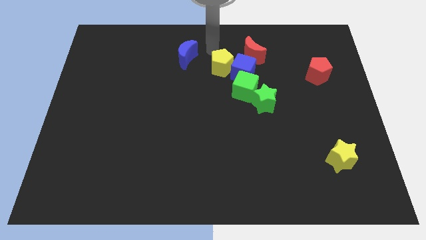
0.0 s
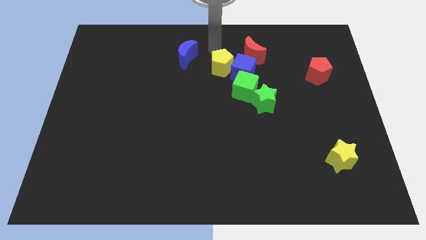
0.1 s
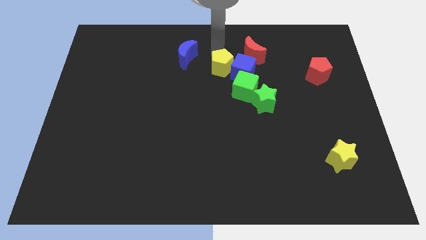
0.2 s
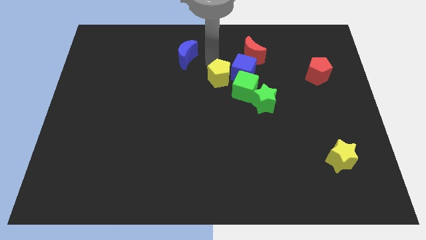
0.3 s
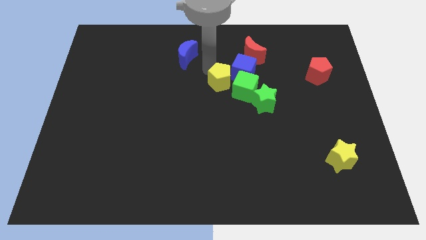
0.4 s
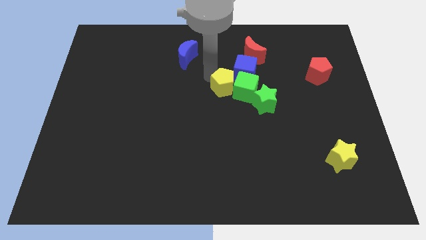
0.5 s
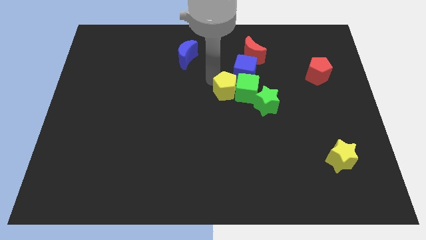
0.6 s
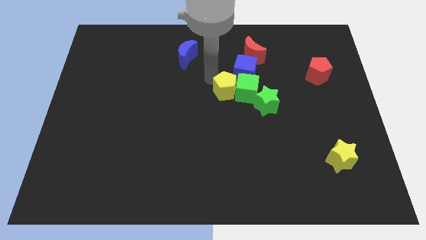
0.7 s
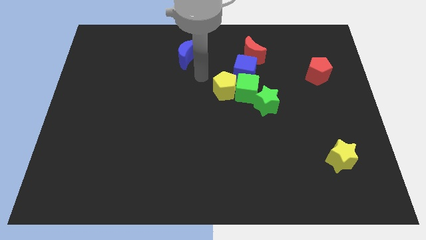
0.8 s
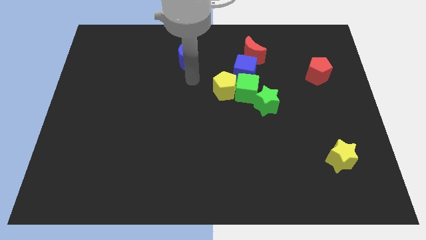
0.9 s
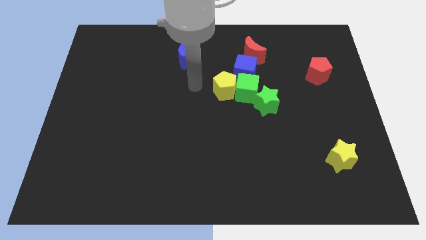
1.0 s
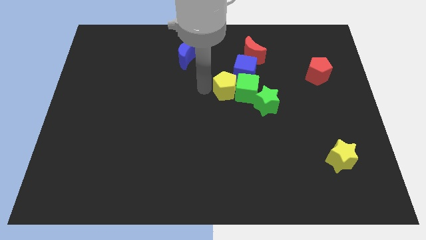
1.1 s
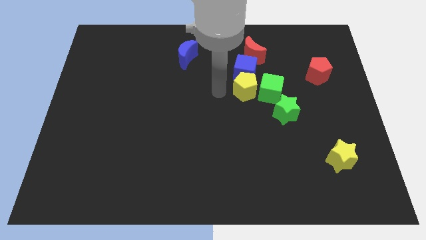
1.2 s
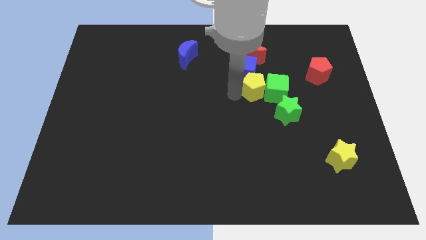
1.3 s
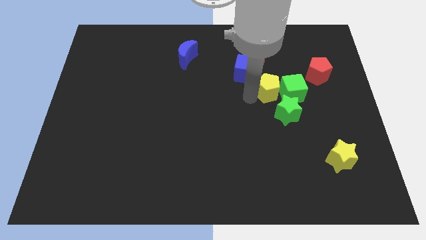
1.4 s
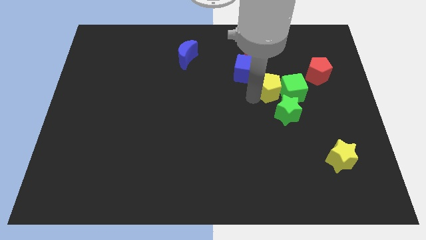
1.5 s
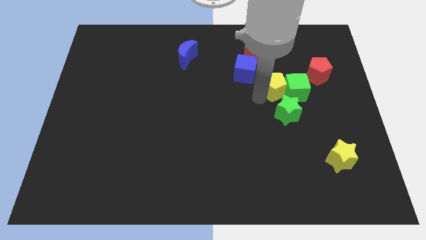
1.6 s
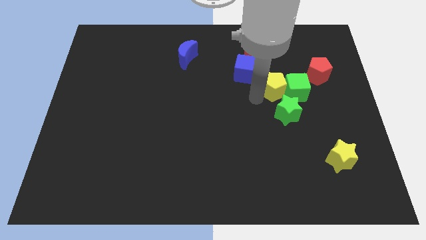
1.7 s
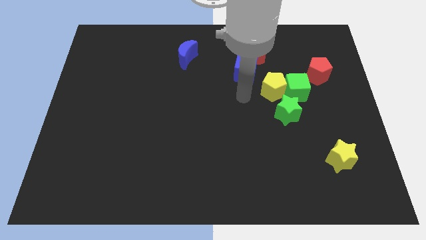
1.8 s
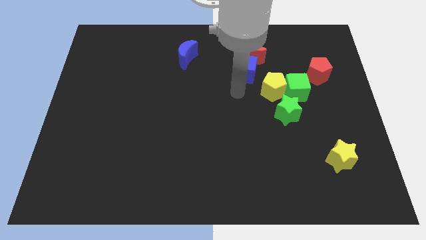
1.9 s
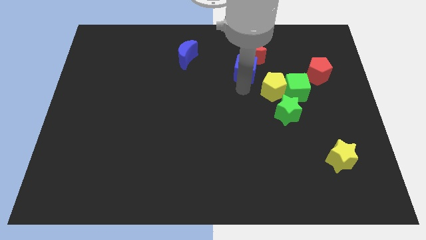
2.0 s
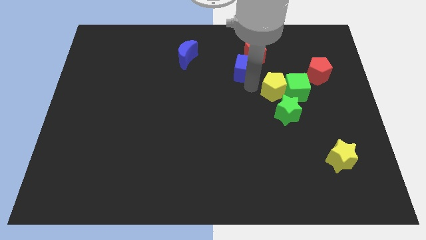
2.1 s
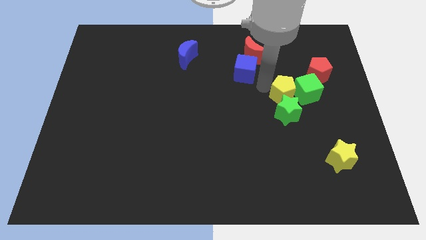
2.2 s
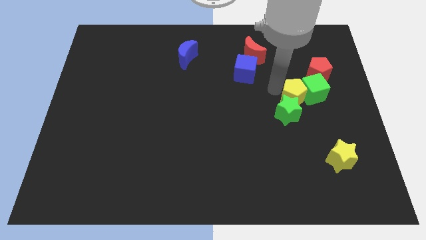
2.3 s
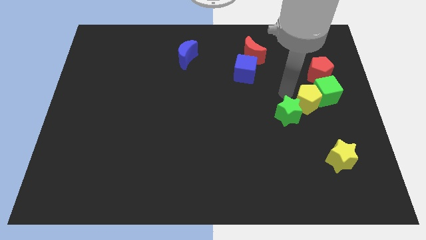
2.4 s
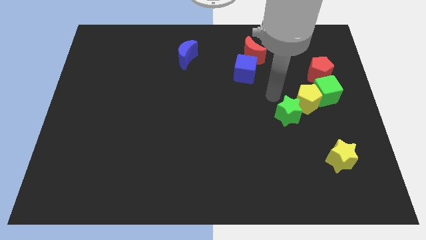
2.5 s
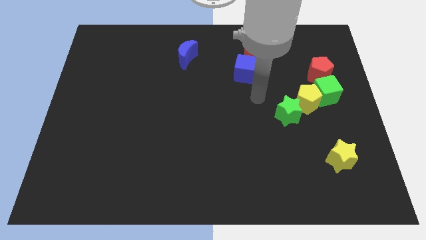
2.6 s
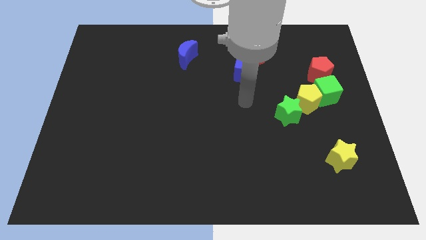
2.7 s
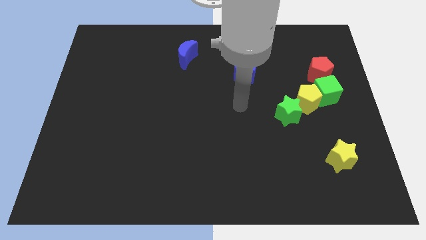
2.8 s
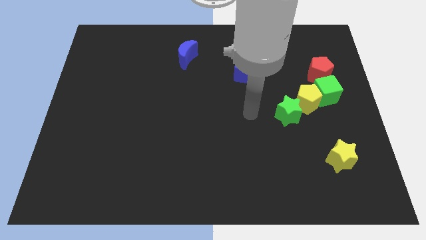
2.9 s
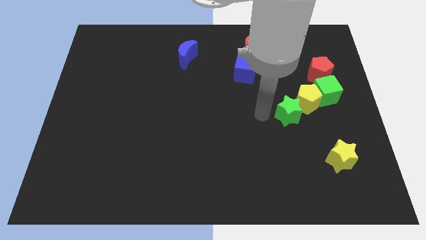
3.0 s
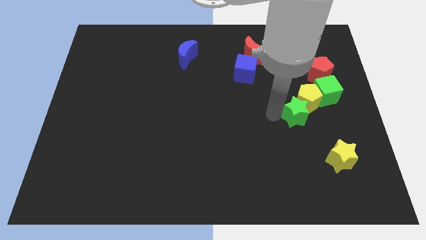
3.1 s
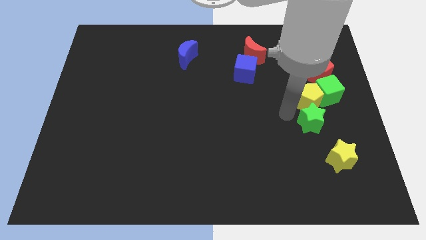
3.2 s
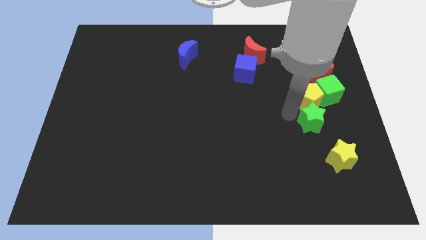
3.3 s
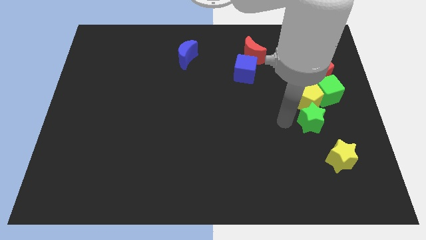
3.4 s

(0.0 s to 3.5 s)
push the green blocks and yellow pentagon towards center right side of the board

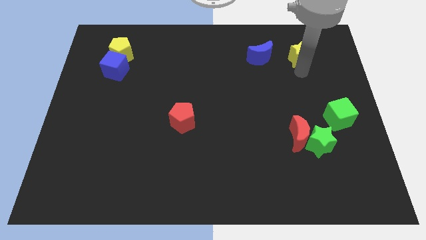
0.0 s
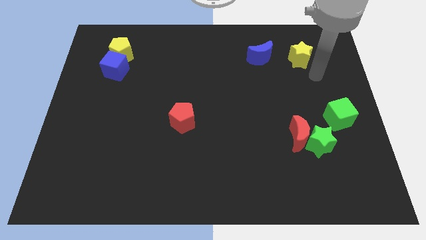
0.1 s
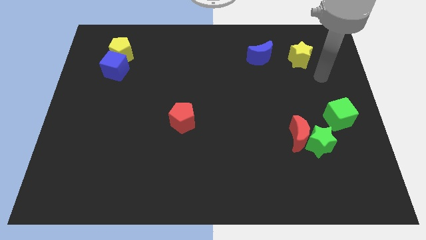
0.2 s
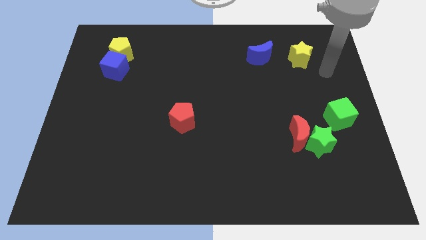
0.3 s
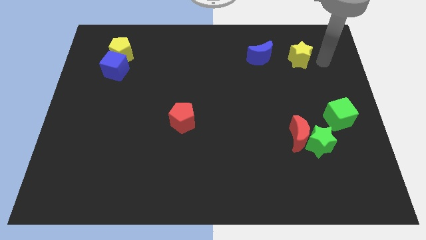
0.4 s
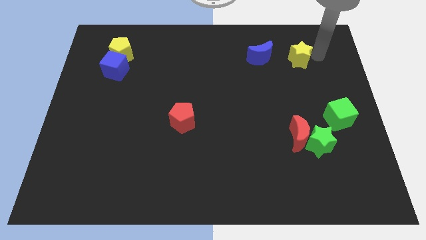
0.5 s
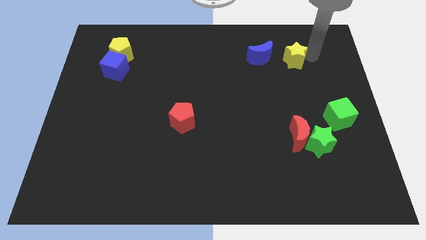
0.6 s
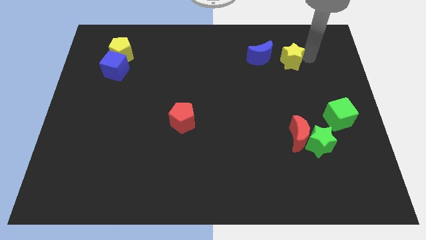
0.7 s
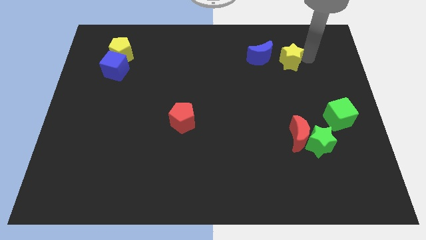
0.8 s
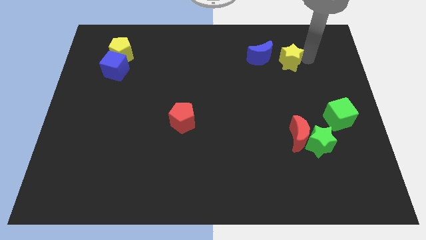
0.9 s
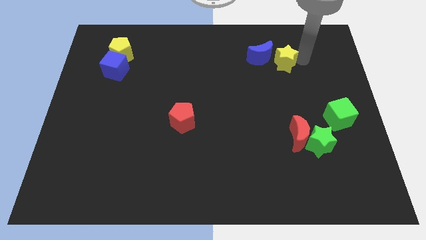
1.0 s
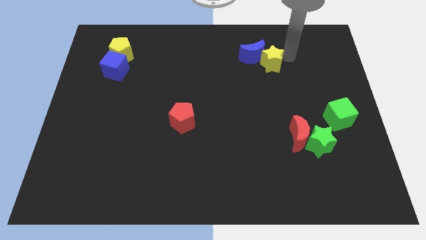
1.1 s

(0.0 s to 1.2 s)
push the yellow star into blue crescent

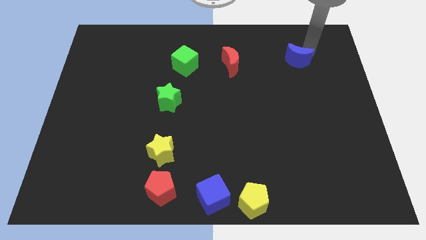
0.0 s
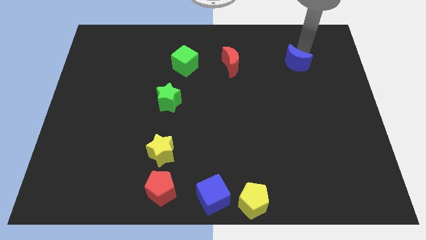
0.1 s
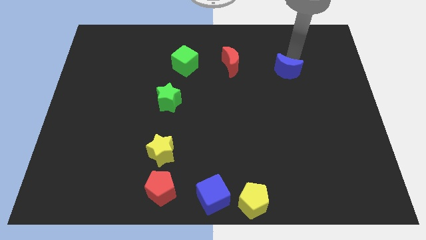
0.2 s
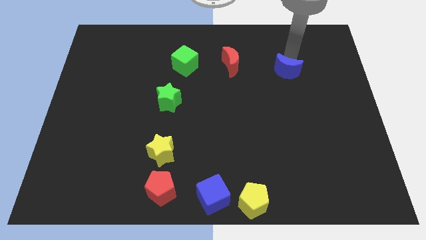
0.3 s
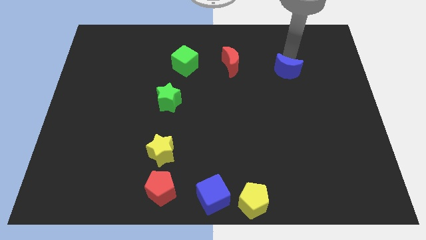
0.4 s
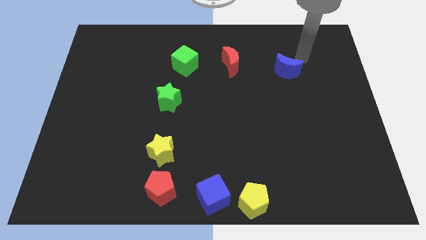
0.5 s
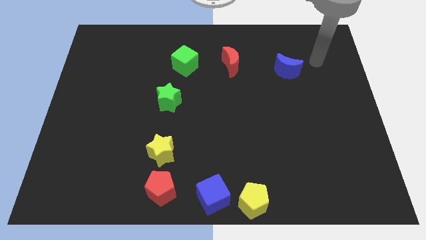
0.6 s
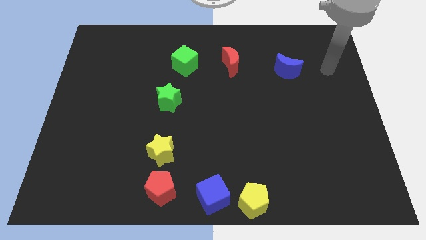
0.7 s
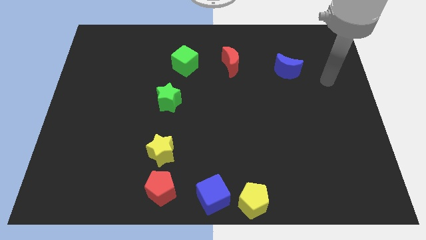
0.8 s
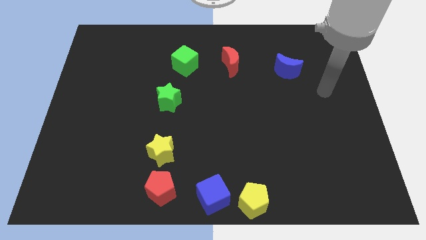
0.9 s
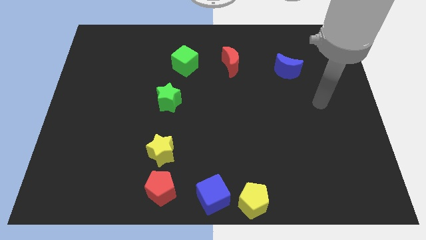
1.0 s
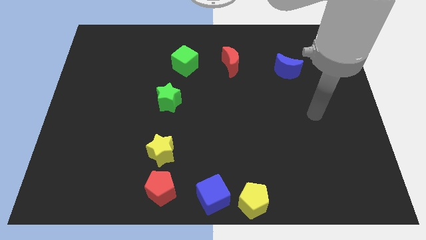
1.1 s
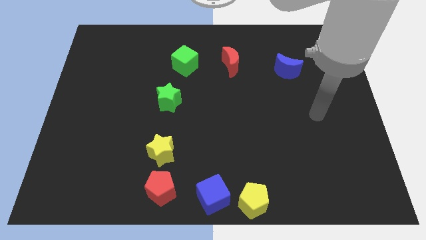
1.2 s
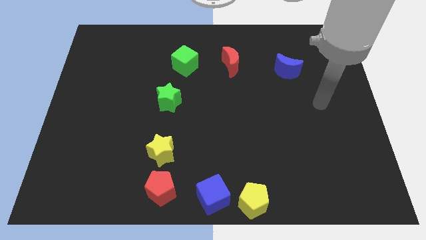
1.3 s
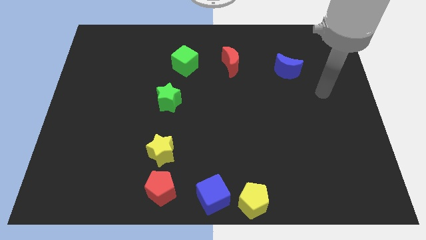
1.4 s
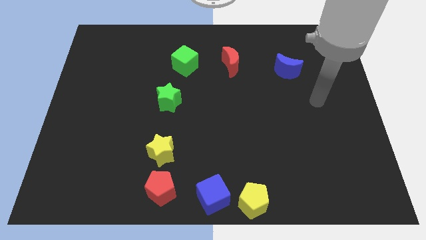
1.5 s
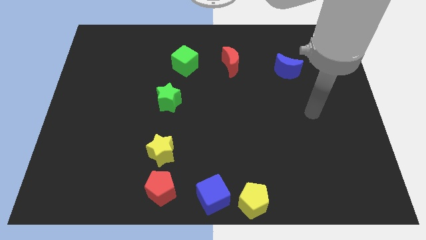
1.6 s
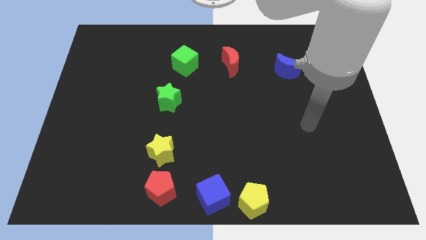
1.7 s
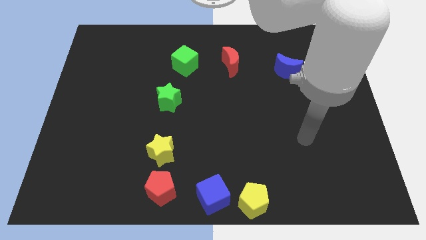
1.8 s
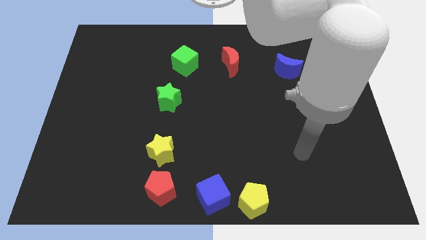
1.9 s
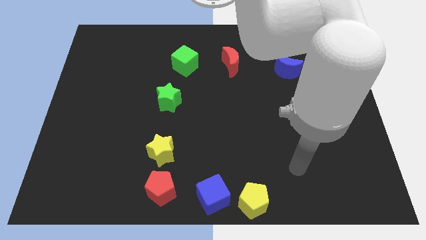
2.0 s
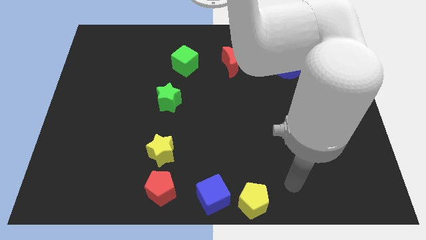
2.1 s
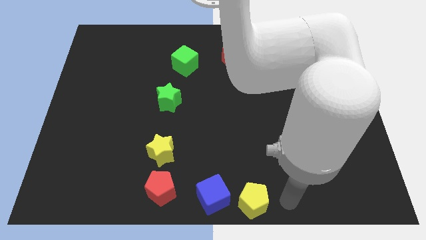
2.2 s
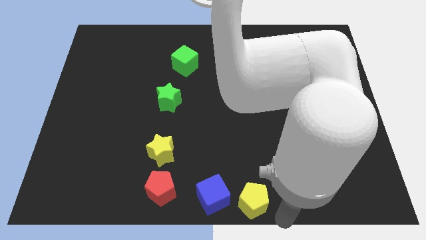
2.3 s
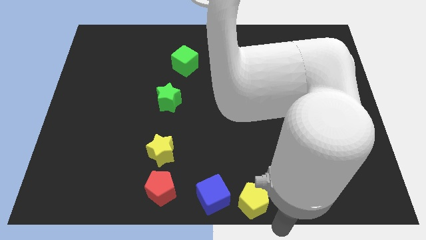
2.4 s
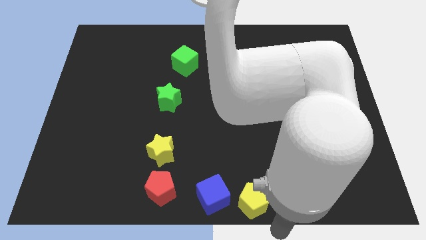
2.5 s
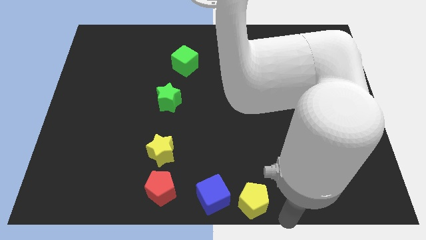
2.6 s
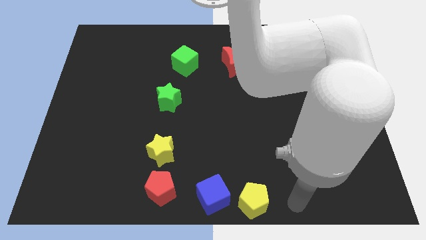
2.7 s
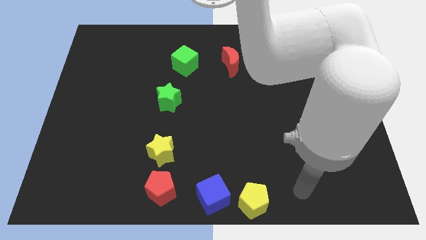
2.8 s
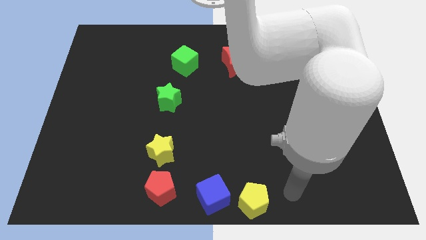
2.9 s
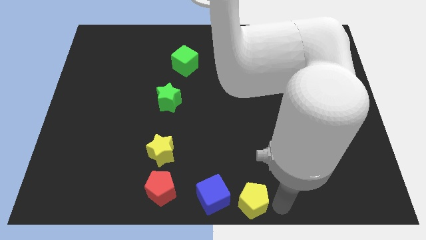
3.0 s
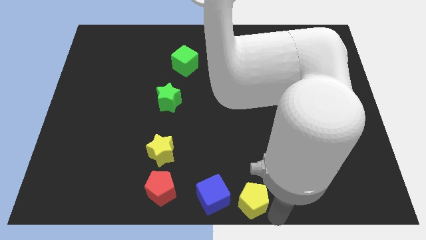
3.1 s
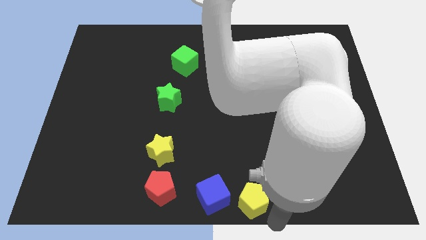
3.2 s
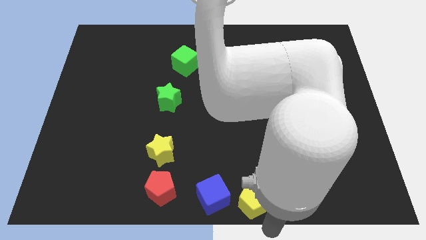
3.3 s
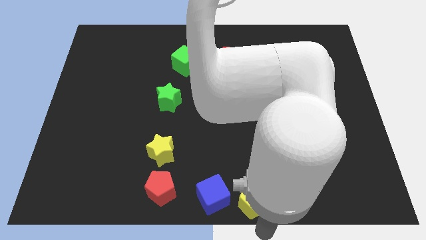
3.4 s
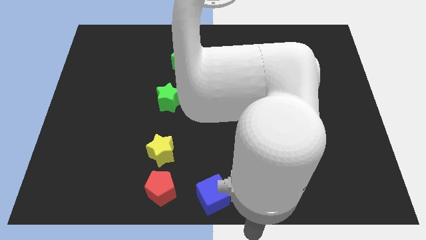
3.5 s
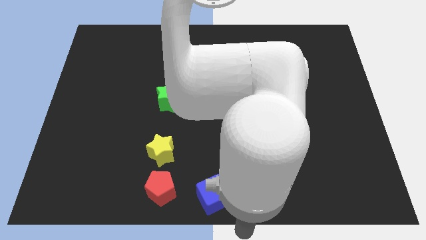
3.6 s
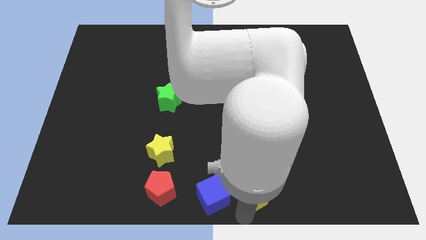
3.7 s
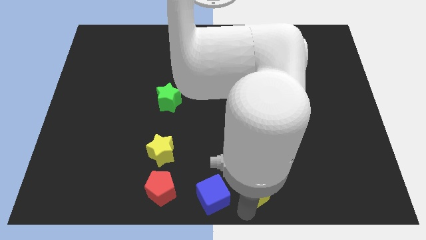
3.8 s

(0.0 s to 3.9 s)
move your hand from blue crescent to yellow pentagon

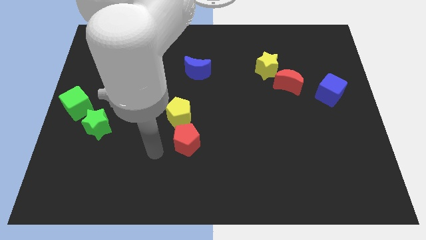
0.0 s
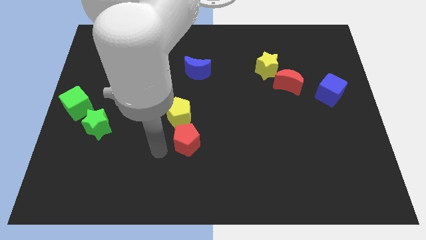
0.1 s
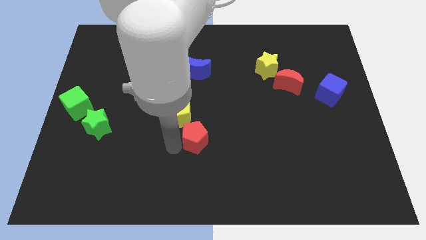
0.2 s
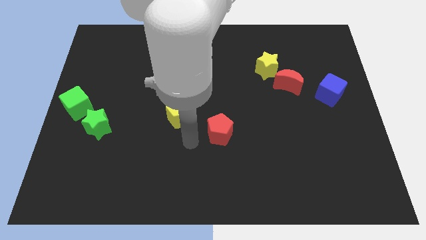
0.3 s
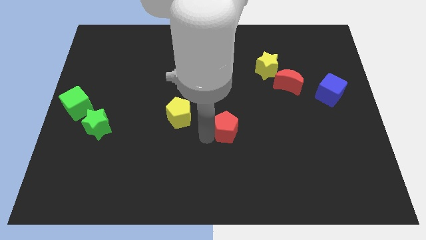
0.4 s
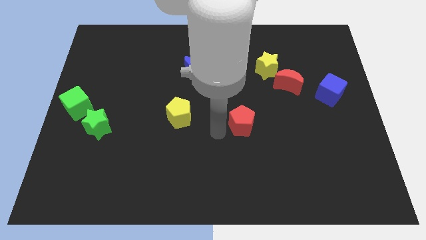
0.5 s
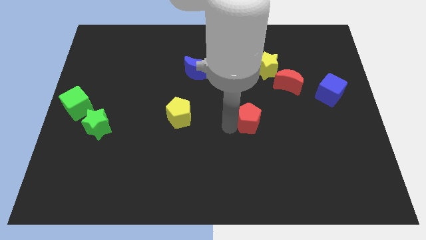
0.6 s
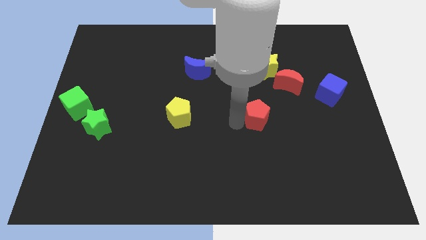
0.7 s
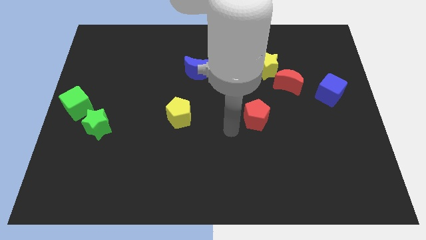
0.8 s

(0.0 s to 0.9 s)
place the red pentagon right to the yellow pentagon
